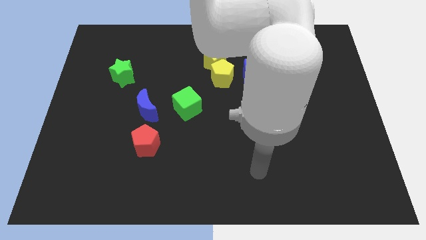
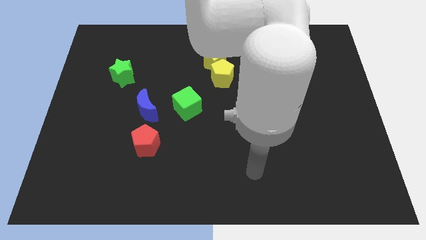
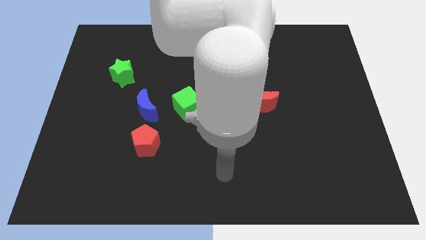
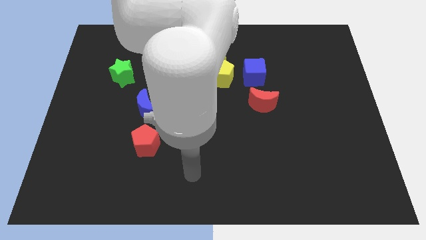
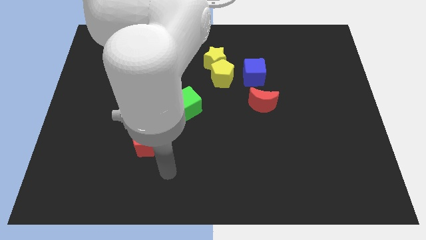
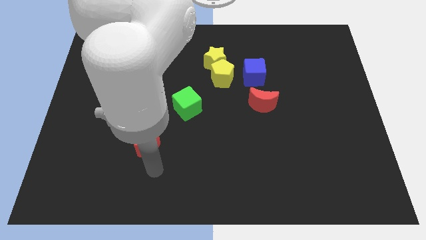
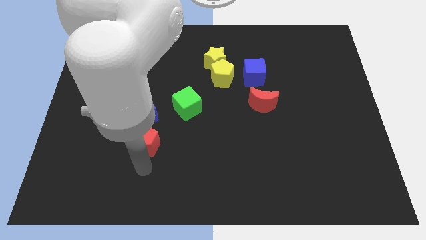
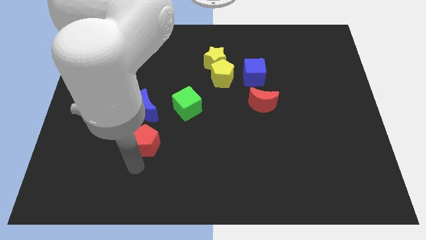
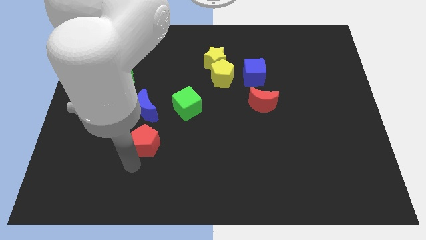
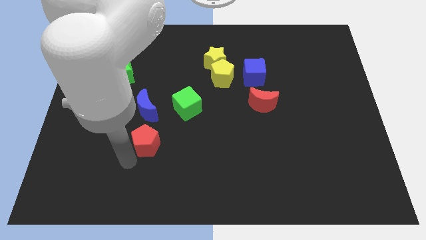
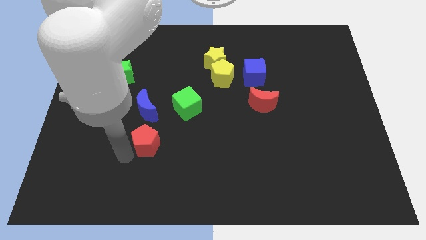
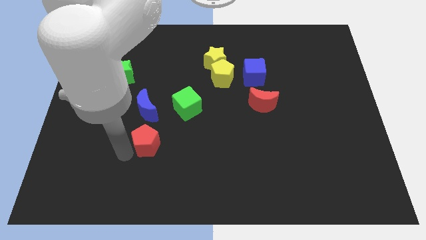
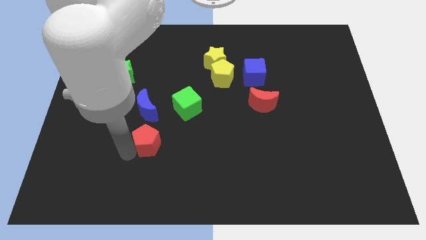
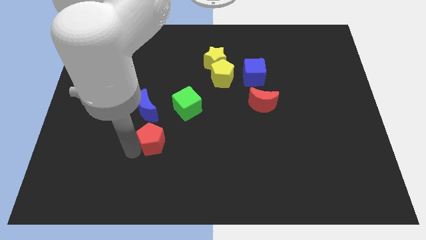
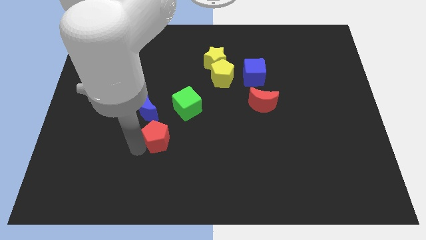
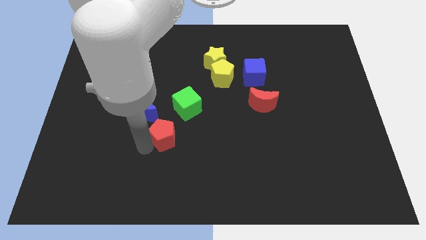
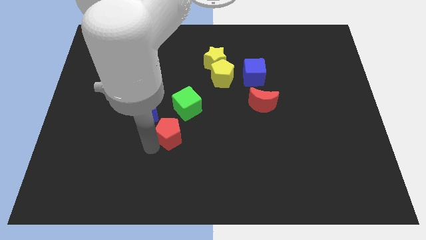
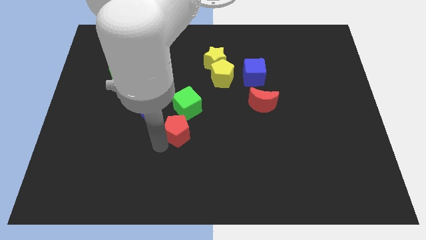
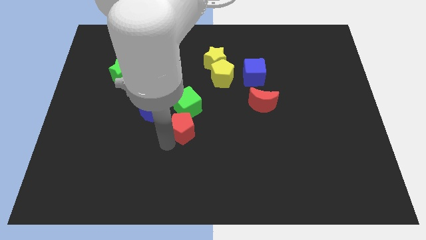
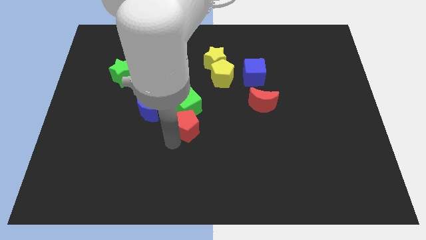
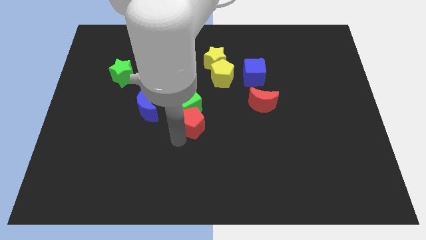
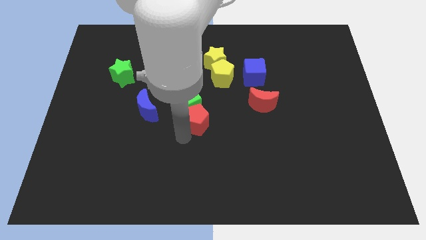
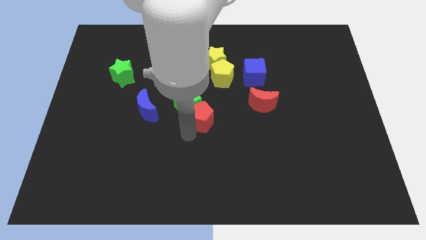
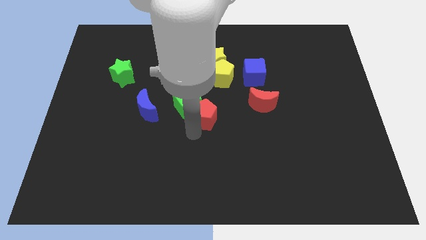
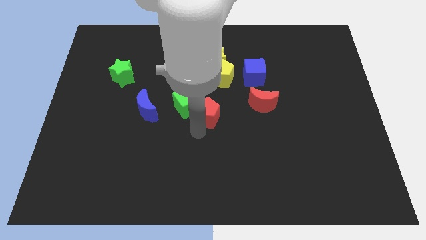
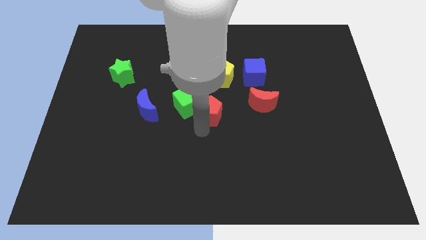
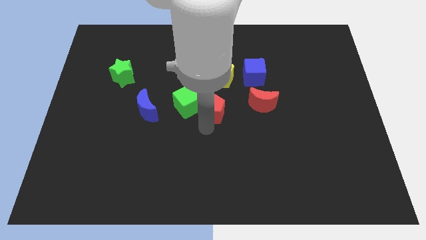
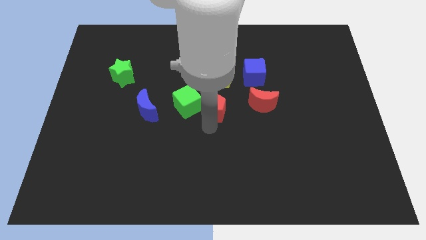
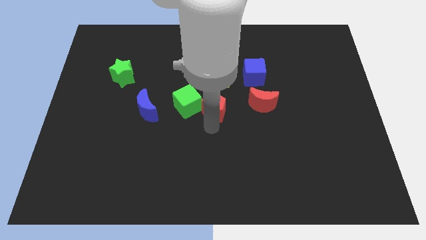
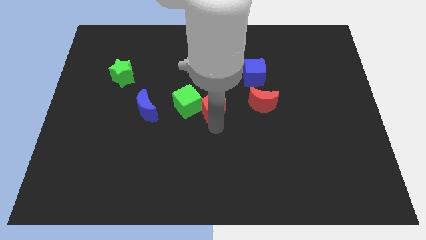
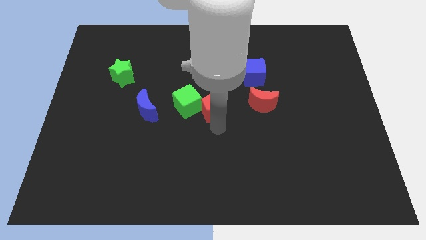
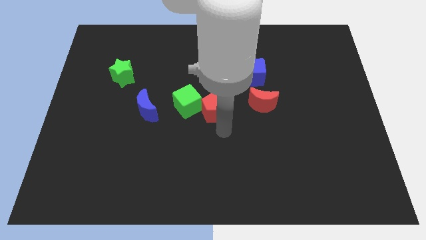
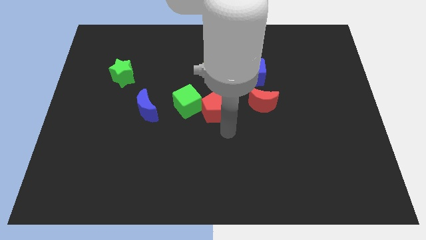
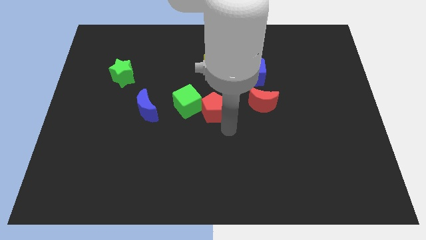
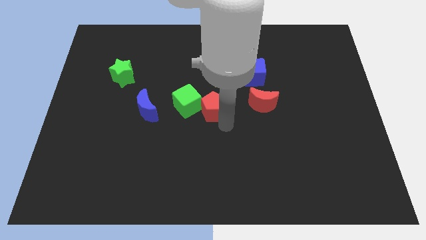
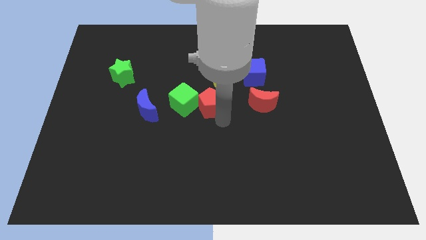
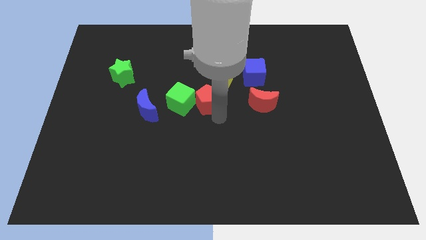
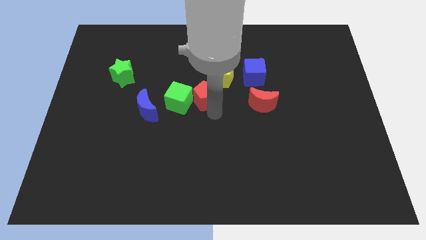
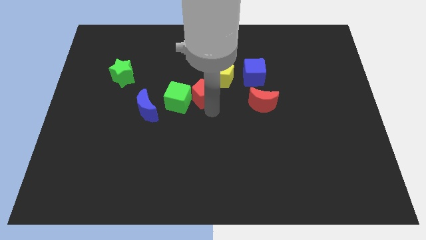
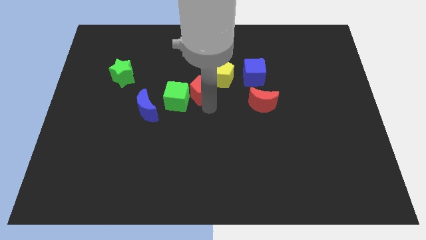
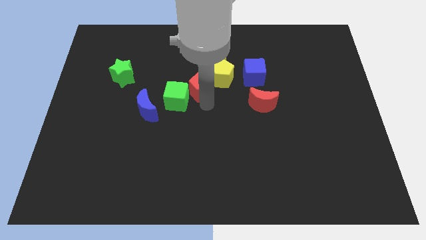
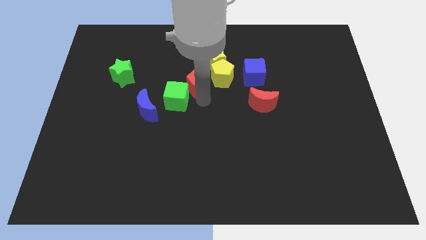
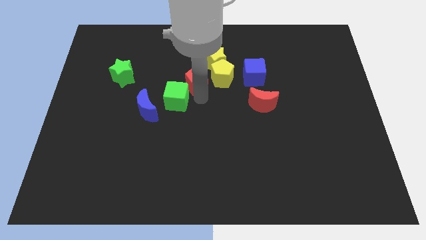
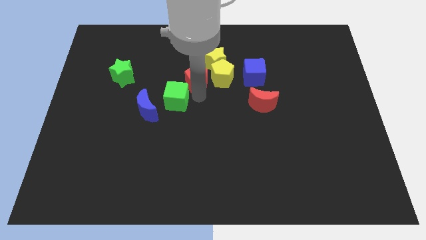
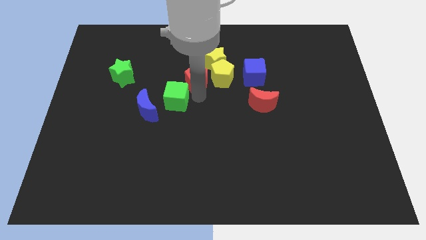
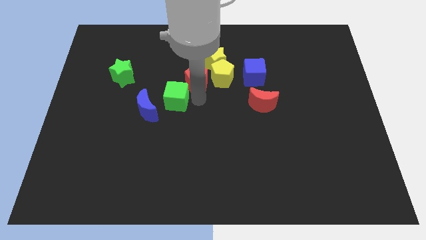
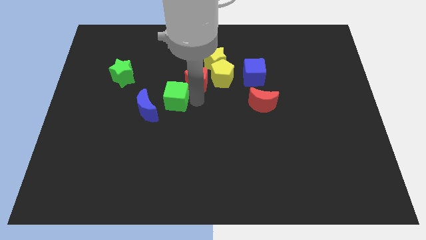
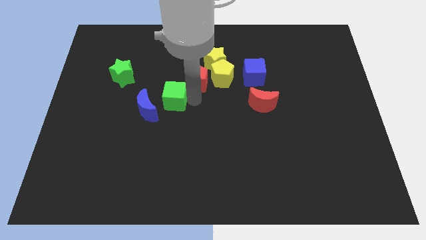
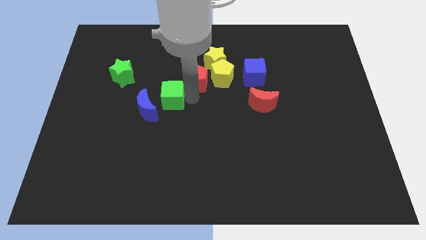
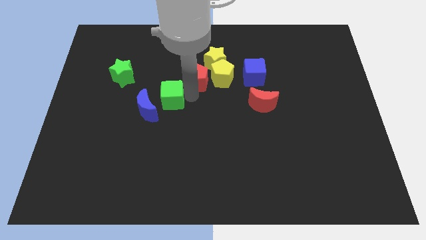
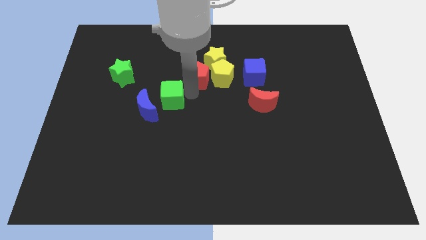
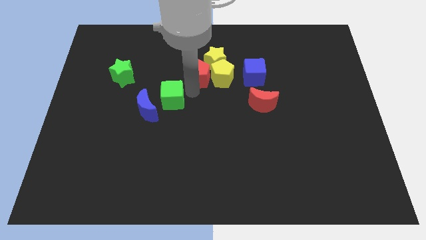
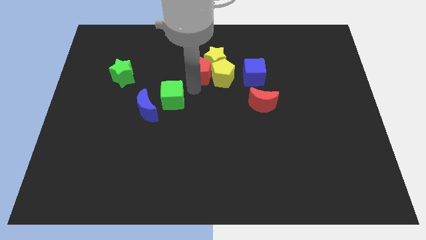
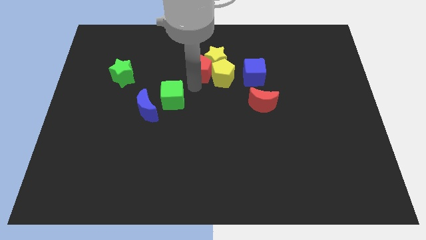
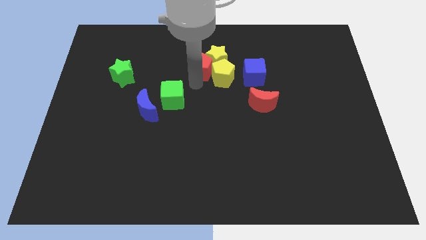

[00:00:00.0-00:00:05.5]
put the red pentagon towards the yellow star

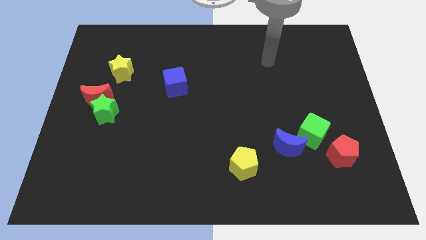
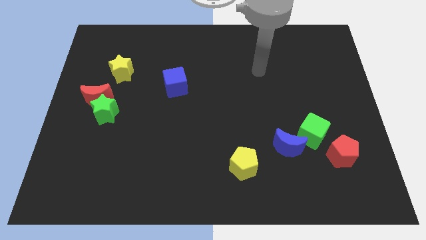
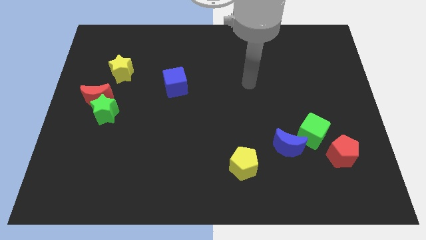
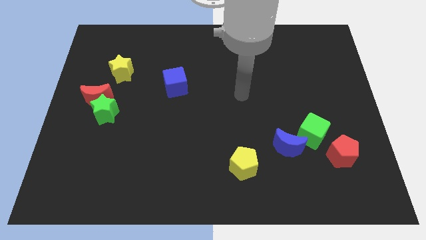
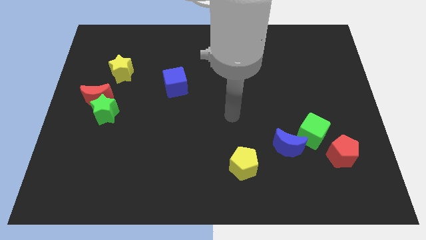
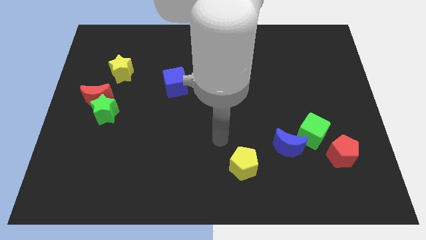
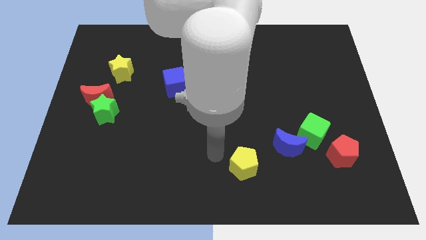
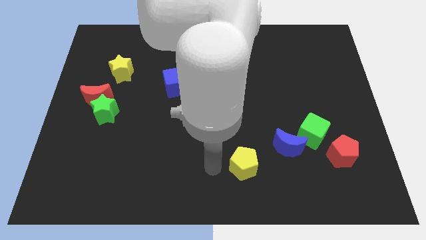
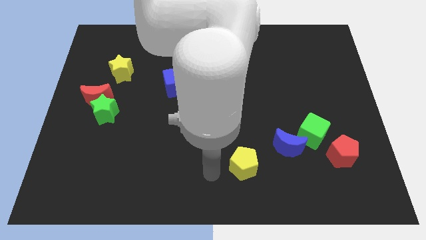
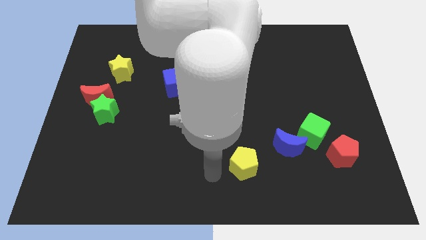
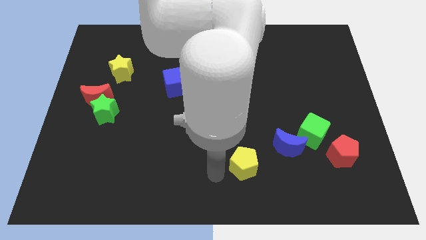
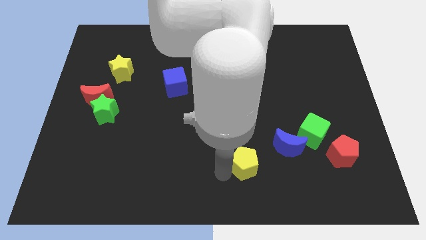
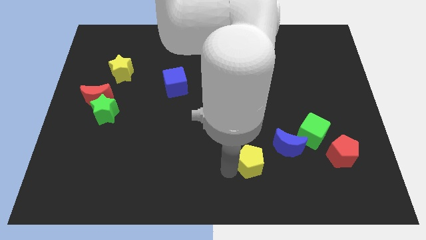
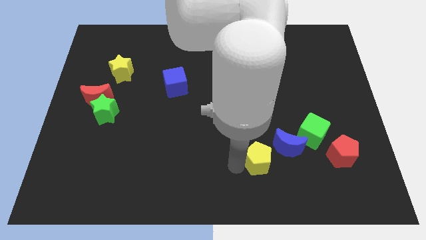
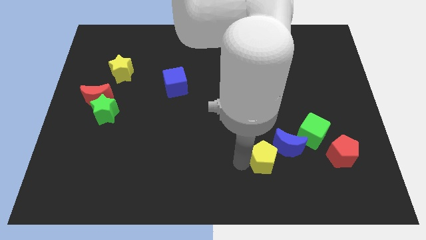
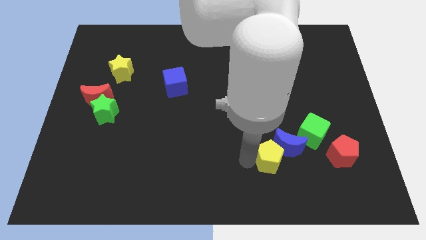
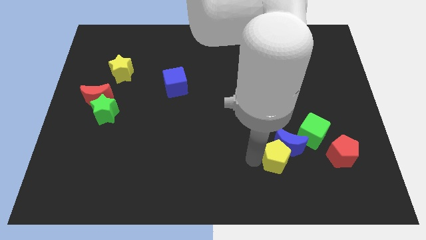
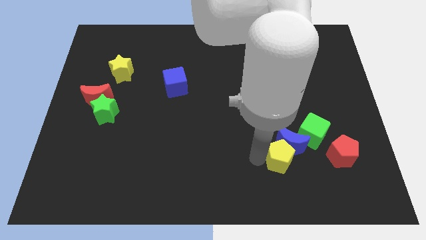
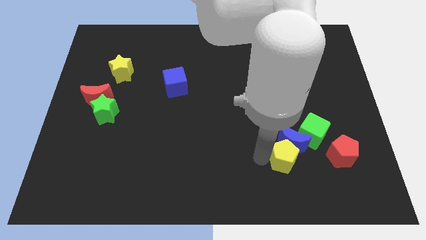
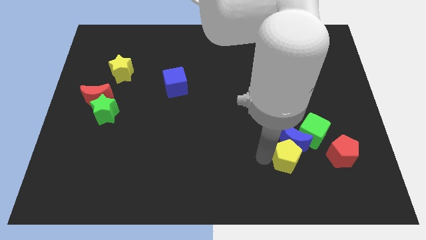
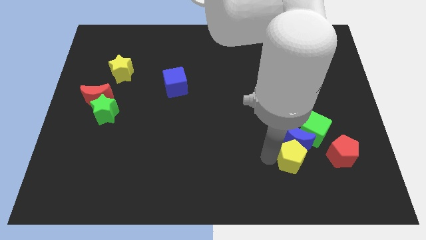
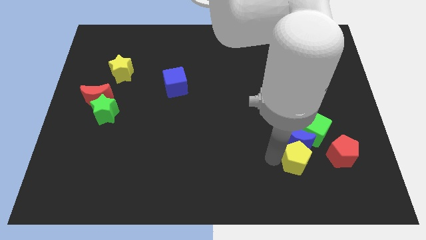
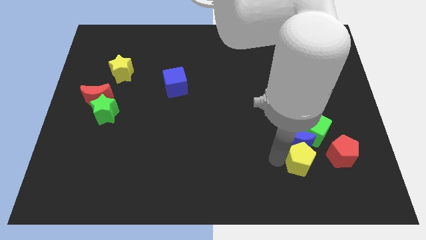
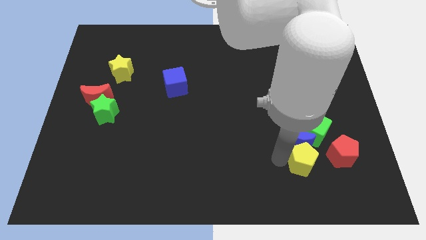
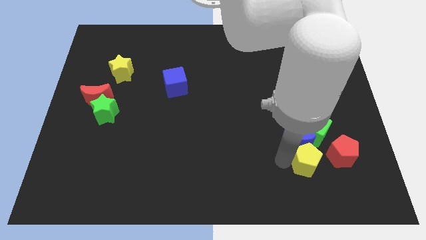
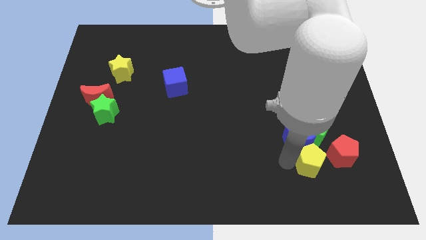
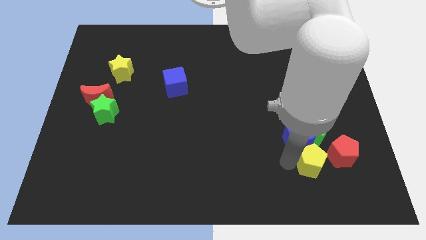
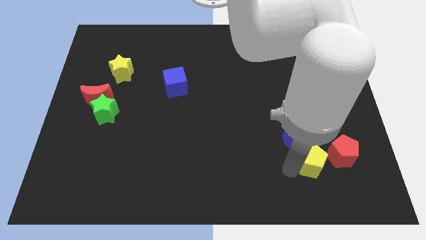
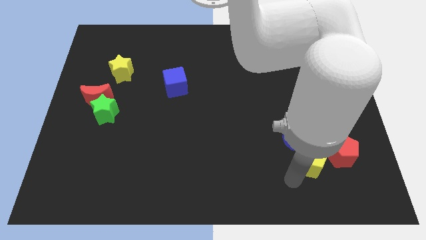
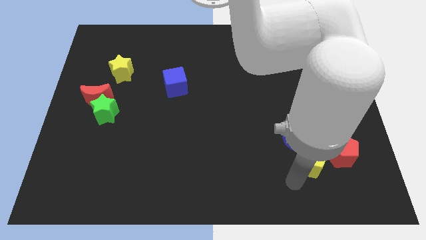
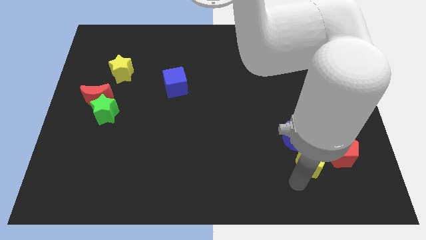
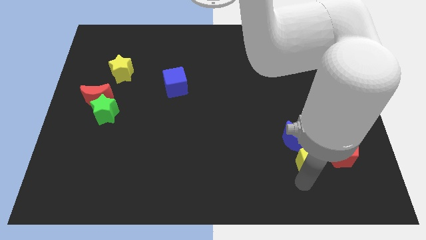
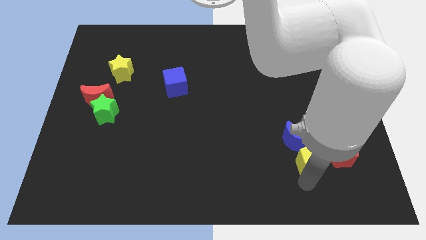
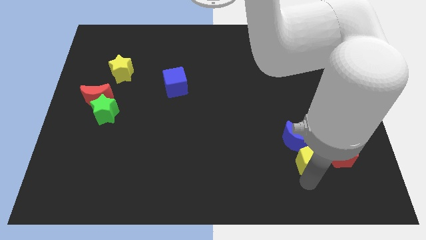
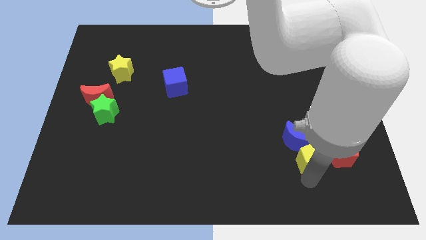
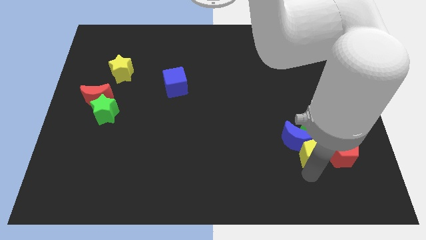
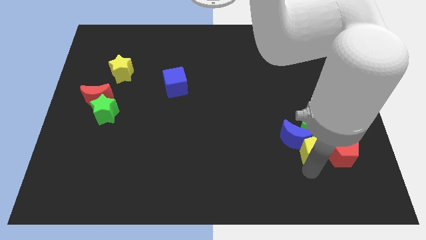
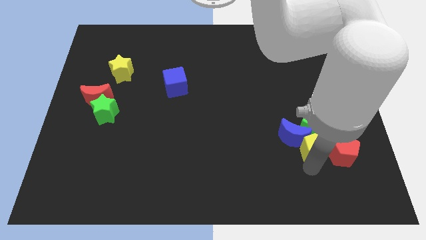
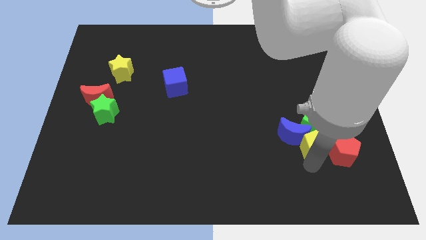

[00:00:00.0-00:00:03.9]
slide the yellow pentagon to the green cube
